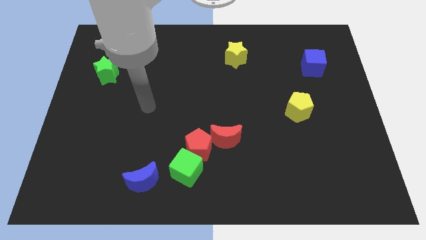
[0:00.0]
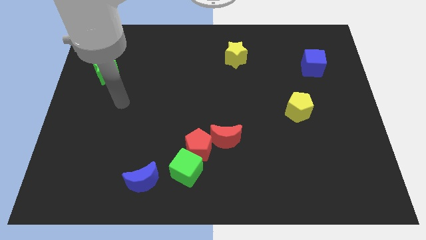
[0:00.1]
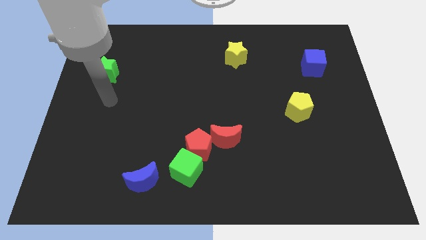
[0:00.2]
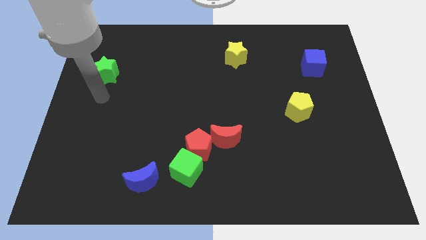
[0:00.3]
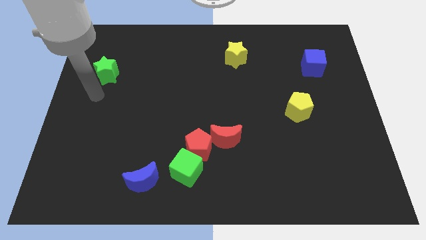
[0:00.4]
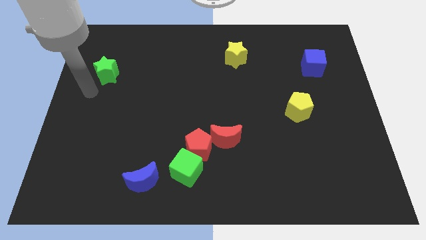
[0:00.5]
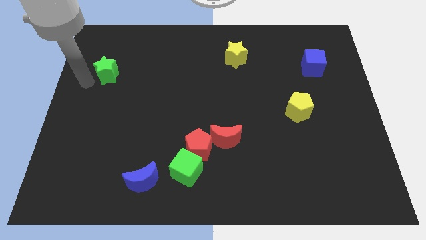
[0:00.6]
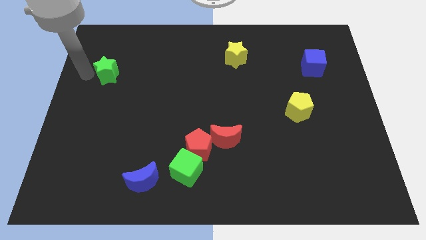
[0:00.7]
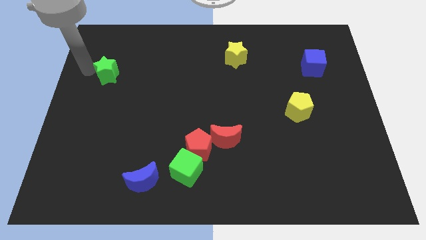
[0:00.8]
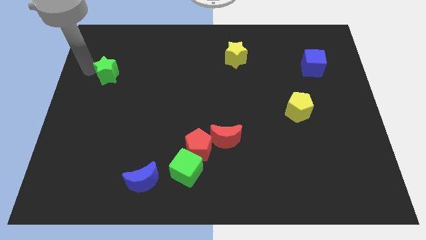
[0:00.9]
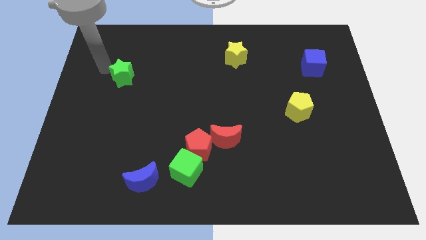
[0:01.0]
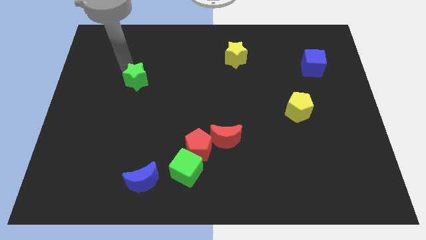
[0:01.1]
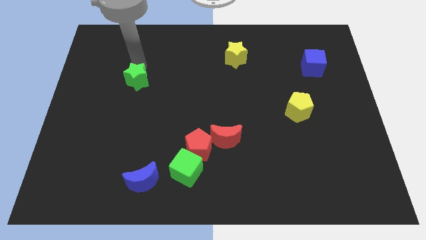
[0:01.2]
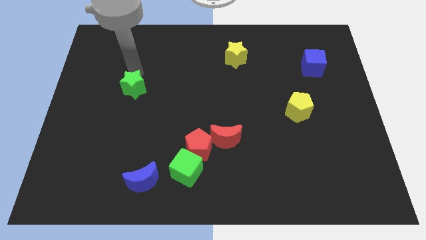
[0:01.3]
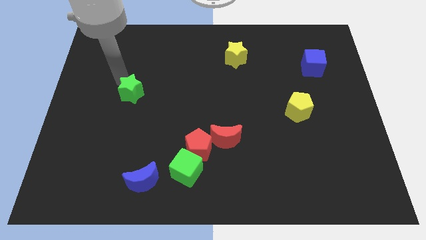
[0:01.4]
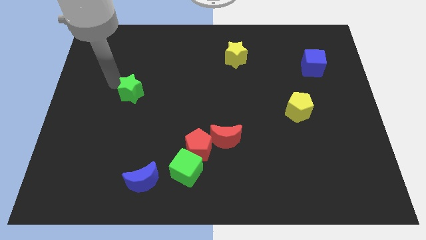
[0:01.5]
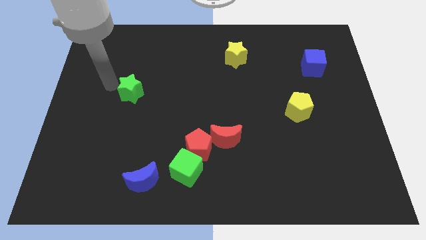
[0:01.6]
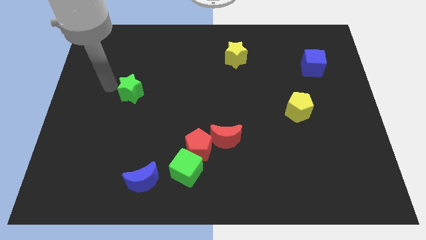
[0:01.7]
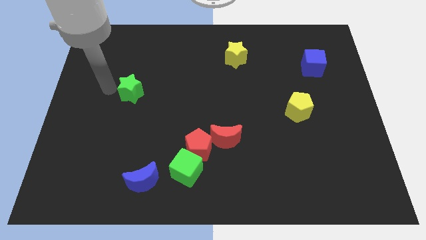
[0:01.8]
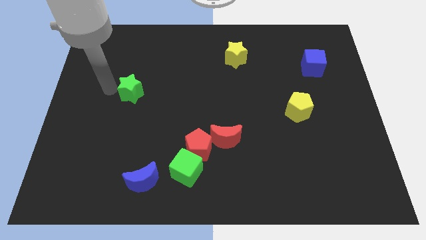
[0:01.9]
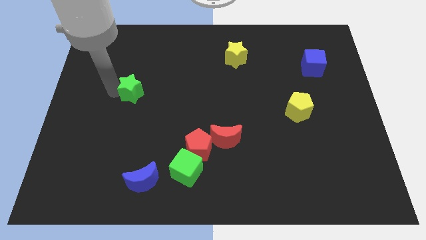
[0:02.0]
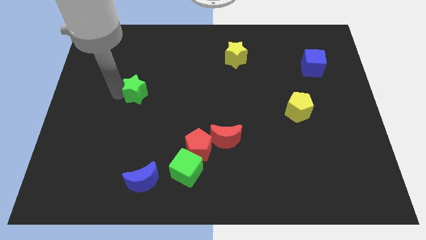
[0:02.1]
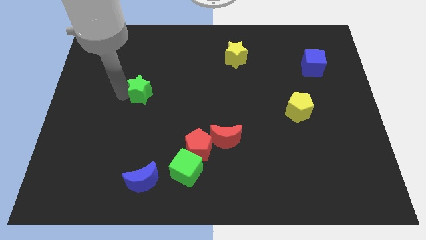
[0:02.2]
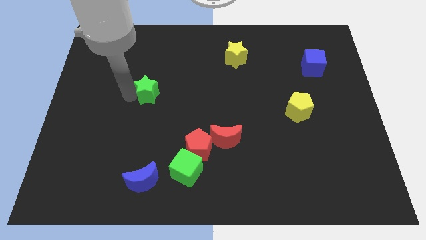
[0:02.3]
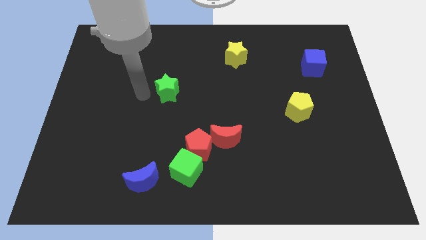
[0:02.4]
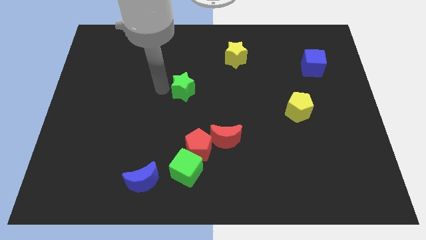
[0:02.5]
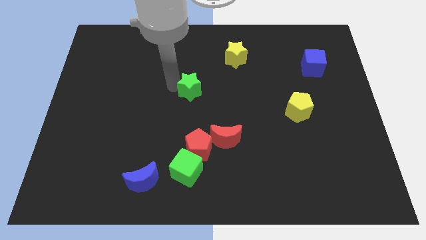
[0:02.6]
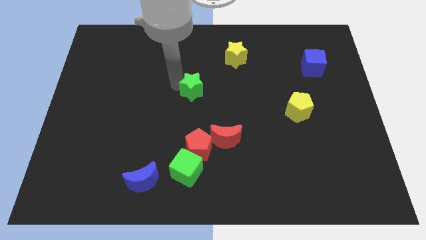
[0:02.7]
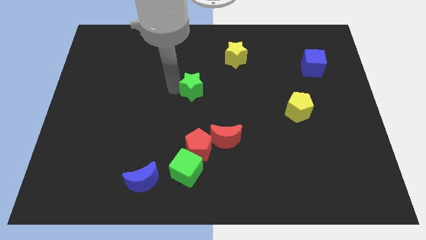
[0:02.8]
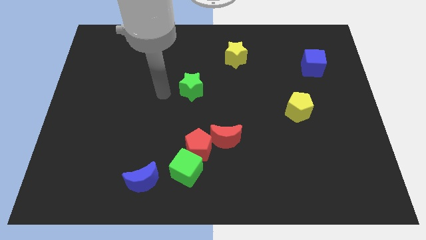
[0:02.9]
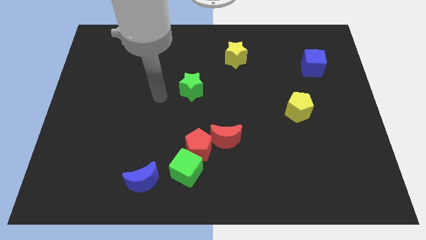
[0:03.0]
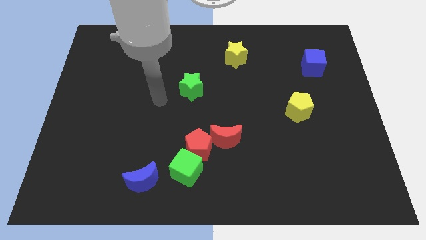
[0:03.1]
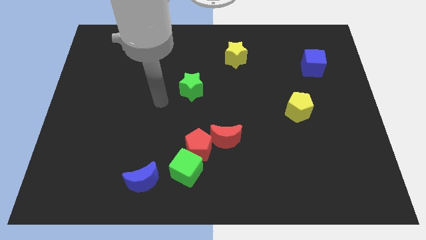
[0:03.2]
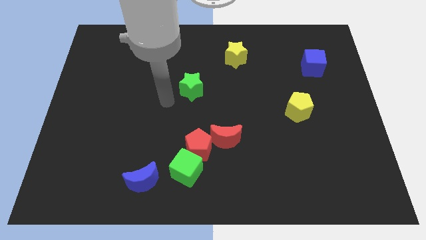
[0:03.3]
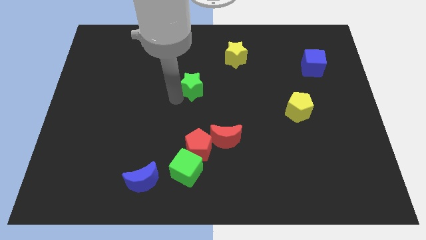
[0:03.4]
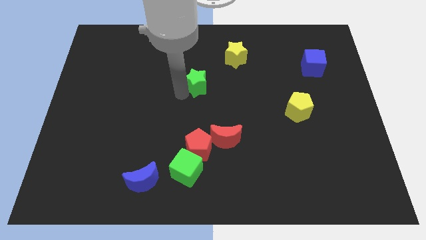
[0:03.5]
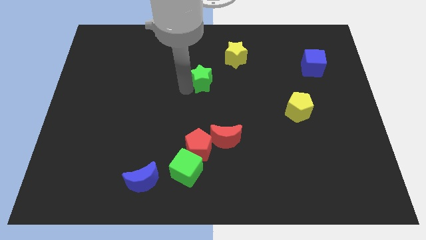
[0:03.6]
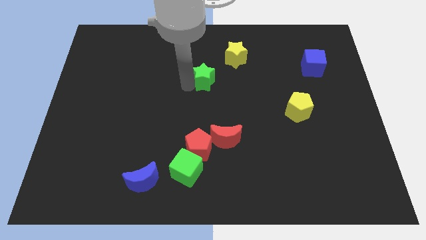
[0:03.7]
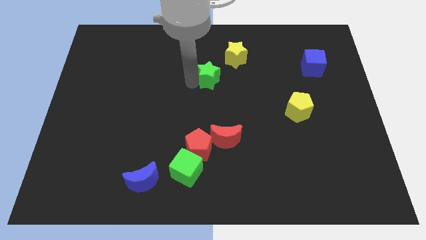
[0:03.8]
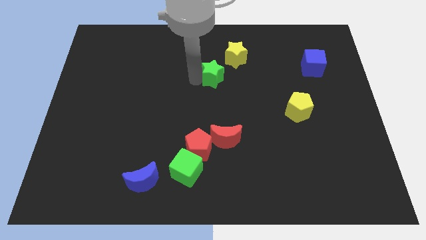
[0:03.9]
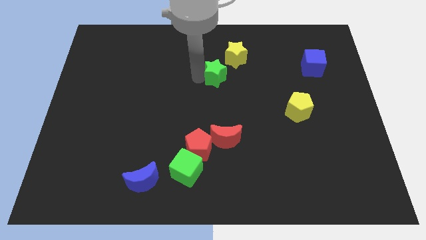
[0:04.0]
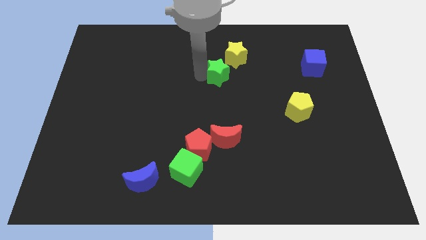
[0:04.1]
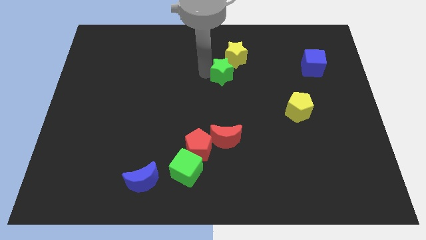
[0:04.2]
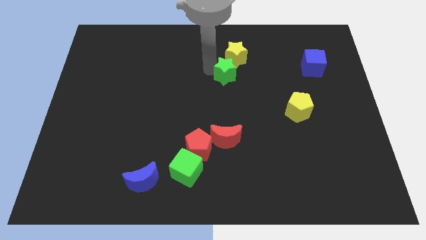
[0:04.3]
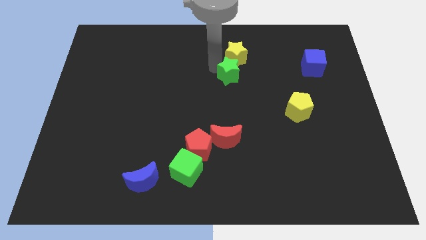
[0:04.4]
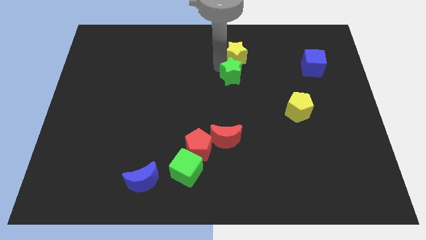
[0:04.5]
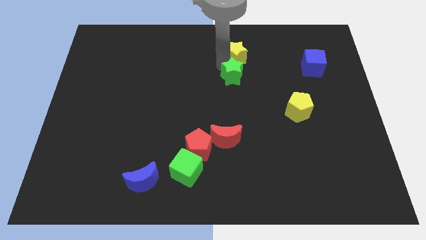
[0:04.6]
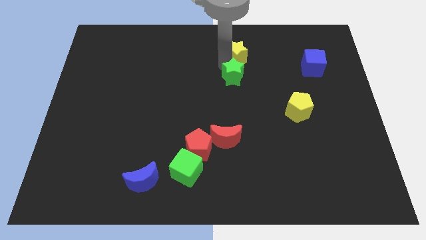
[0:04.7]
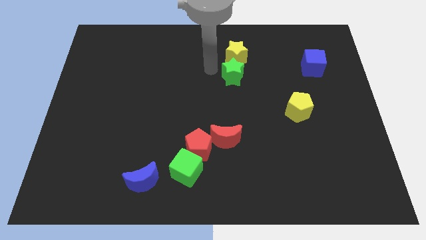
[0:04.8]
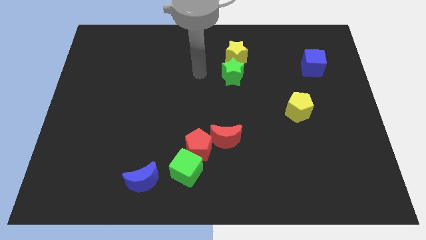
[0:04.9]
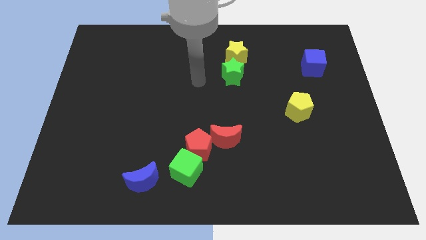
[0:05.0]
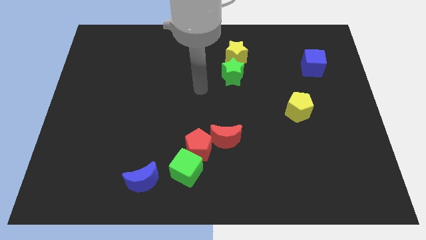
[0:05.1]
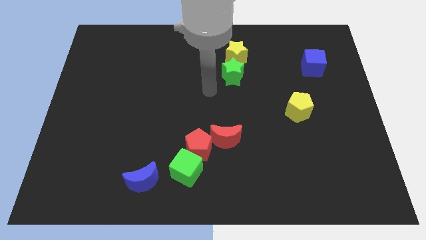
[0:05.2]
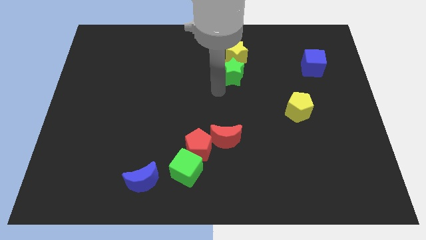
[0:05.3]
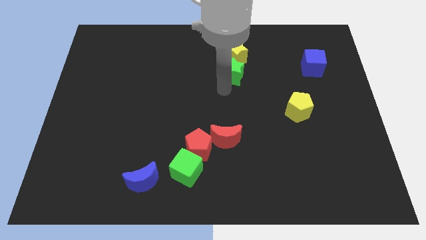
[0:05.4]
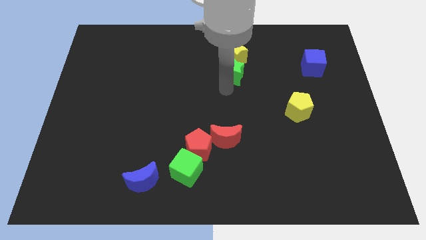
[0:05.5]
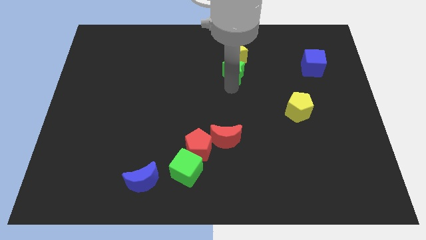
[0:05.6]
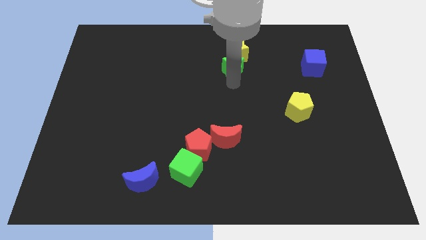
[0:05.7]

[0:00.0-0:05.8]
put the green star next to the yellow star

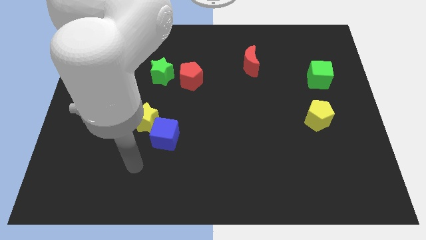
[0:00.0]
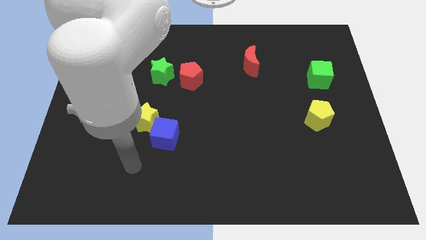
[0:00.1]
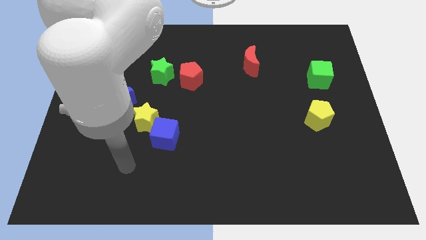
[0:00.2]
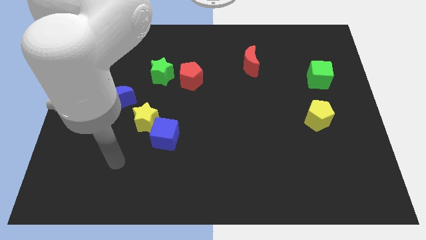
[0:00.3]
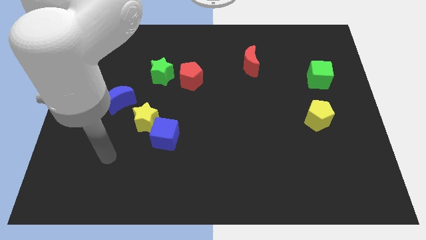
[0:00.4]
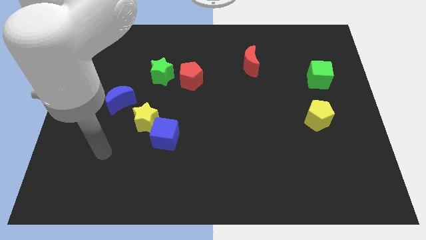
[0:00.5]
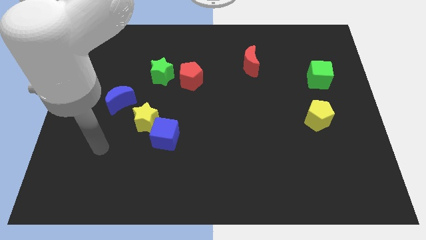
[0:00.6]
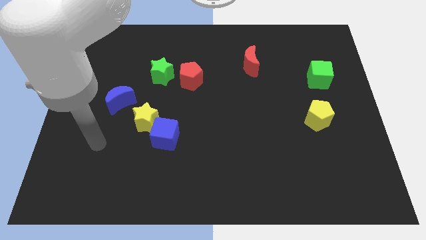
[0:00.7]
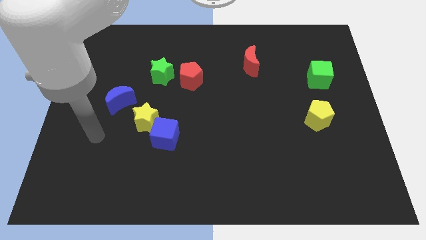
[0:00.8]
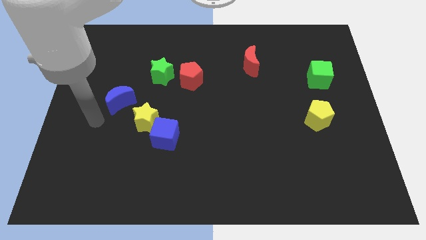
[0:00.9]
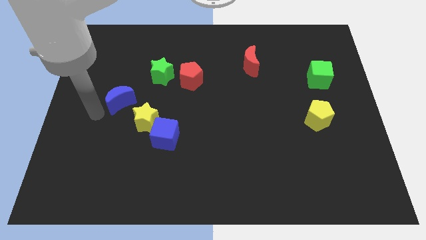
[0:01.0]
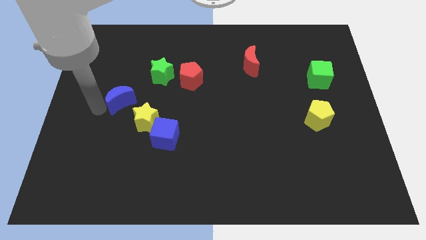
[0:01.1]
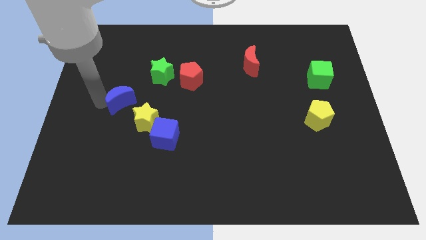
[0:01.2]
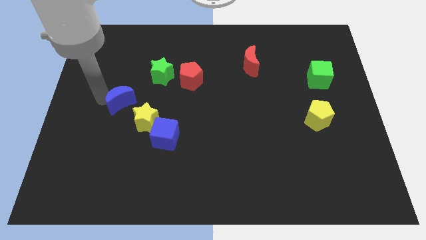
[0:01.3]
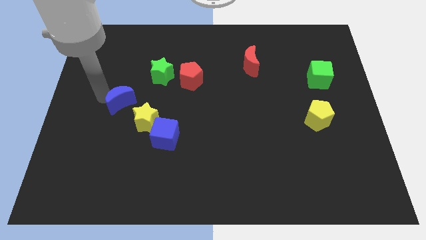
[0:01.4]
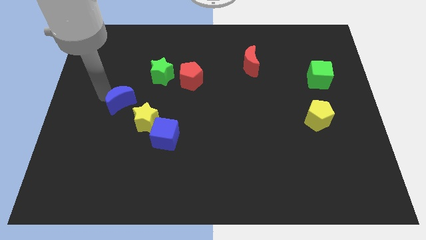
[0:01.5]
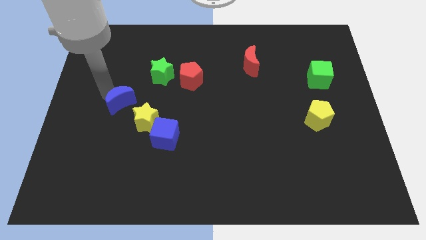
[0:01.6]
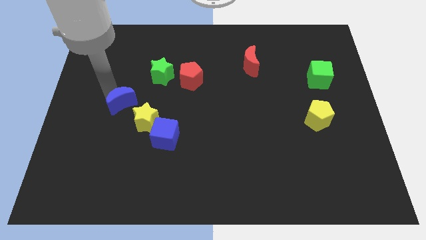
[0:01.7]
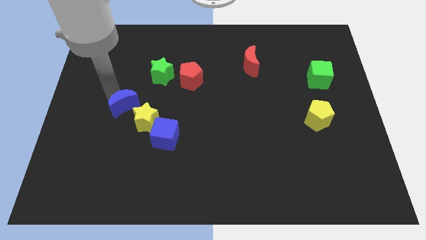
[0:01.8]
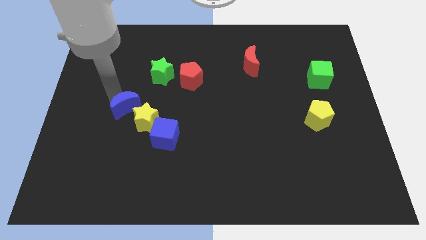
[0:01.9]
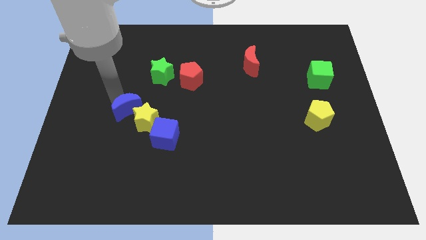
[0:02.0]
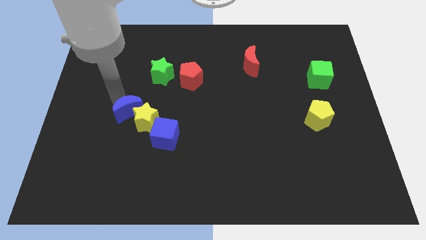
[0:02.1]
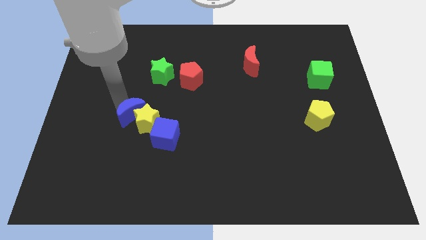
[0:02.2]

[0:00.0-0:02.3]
push the blue moon next to the yellow star

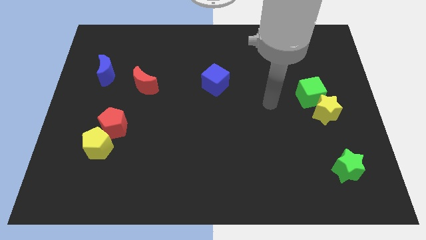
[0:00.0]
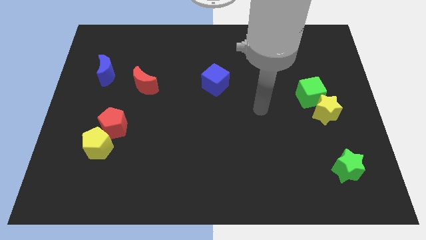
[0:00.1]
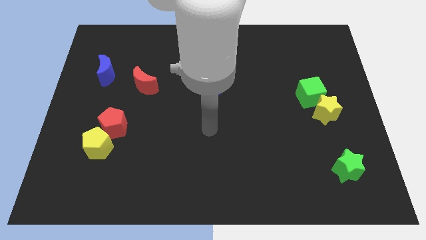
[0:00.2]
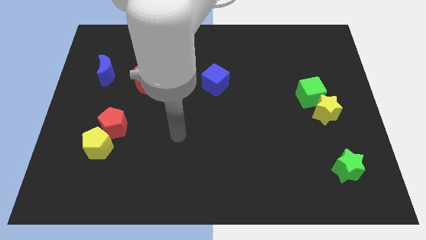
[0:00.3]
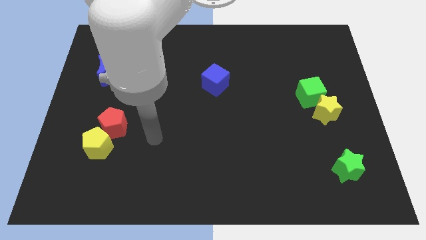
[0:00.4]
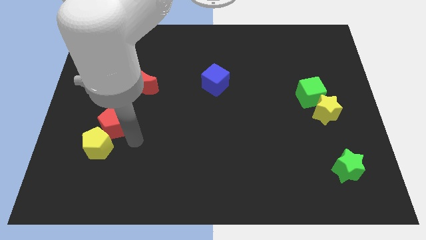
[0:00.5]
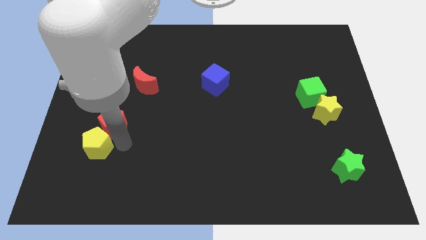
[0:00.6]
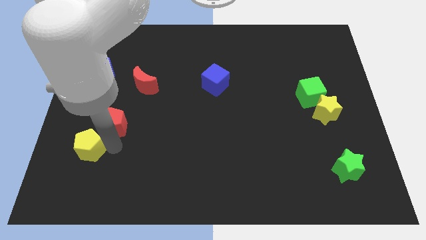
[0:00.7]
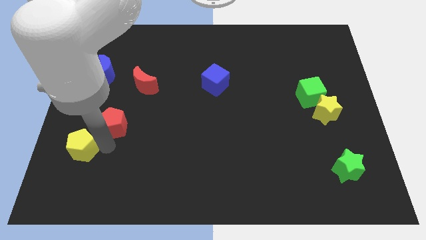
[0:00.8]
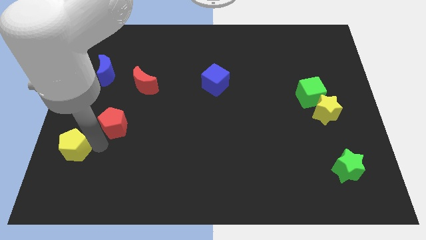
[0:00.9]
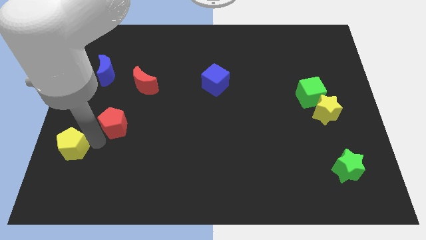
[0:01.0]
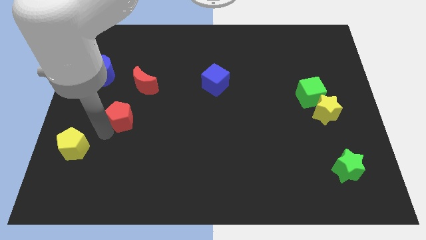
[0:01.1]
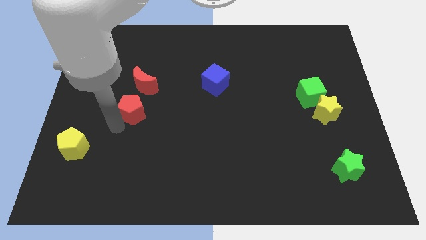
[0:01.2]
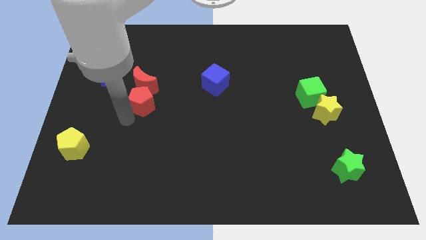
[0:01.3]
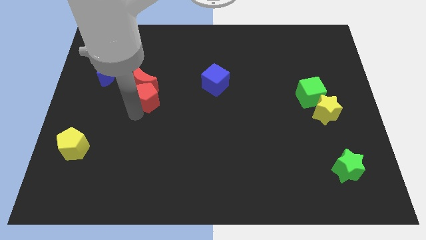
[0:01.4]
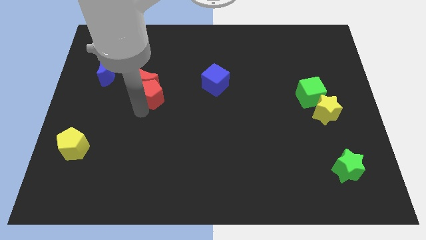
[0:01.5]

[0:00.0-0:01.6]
move the red pentagon next to the red moon
